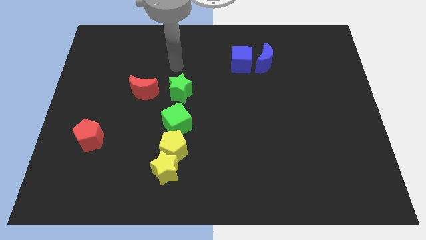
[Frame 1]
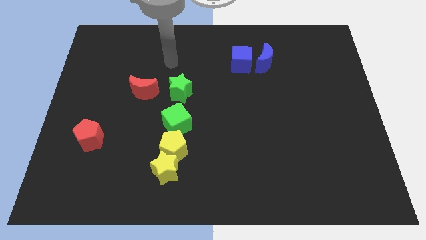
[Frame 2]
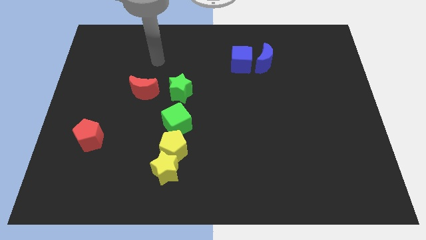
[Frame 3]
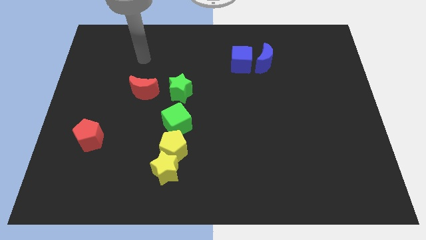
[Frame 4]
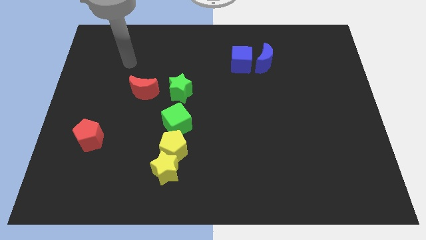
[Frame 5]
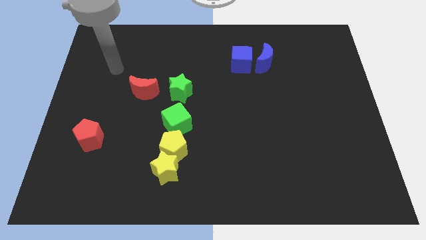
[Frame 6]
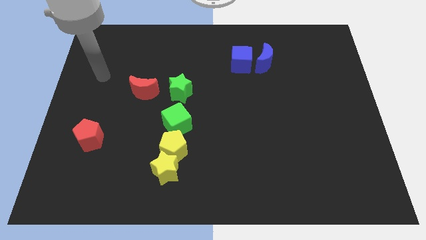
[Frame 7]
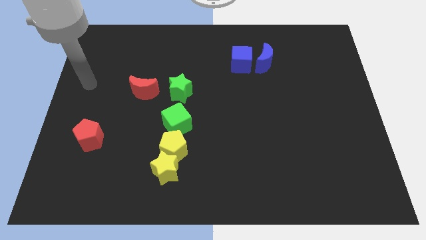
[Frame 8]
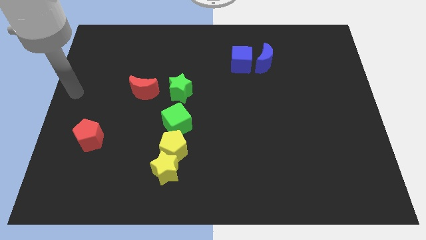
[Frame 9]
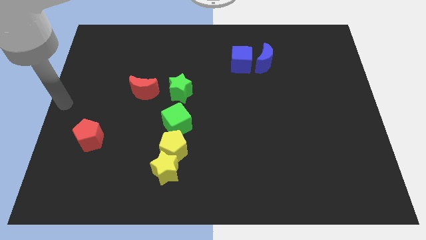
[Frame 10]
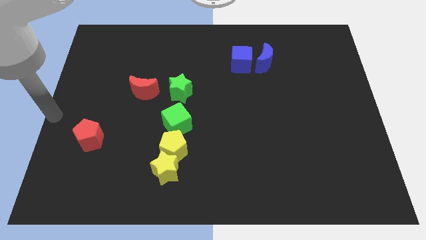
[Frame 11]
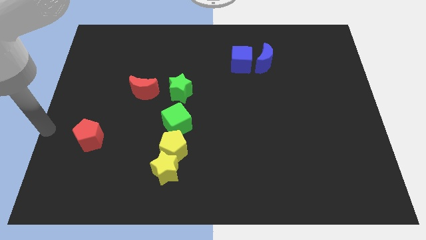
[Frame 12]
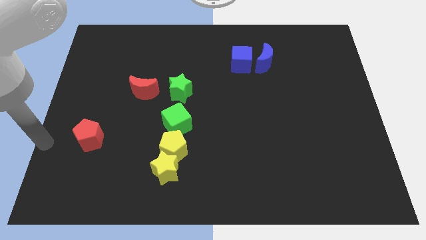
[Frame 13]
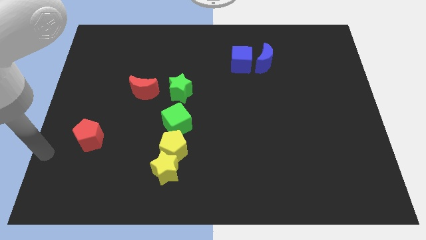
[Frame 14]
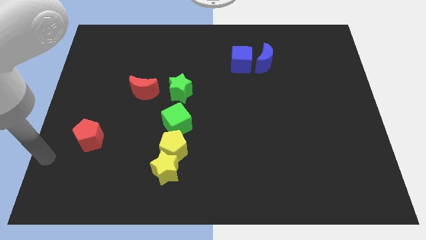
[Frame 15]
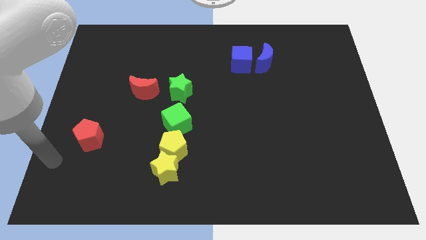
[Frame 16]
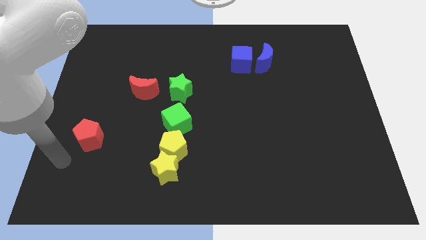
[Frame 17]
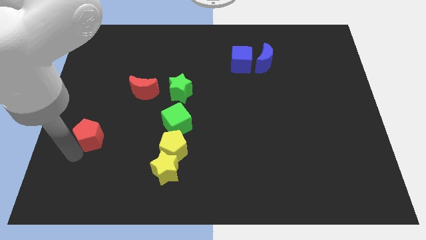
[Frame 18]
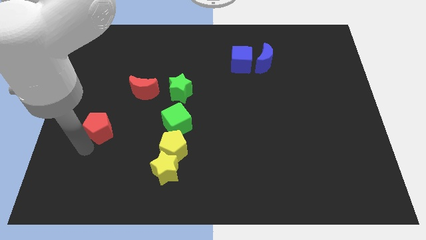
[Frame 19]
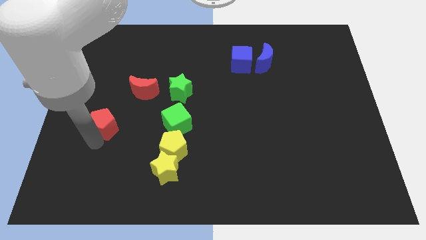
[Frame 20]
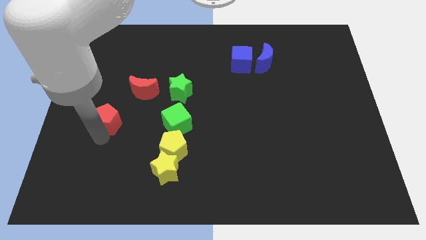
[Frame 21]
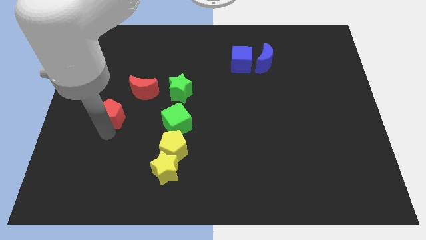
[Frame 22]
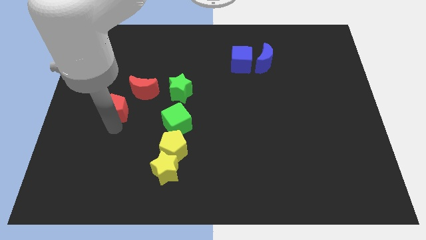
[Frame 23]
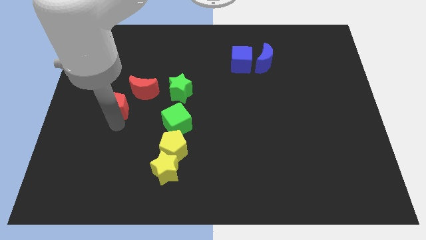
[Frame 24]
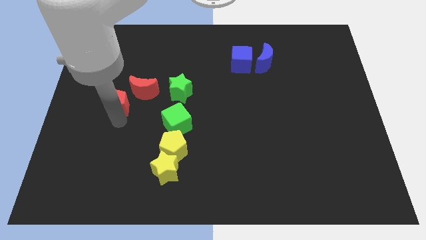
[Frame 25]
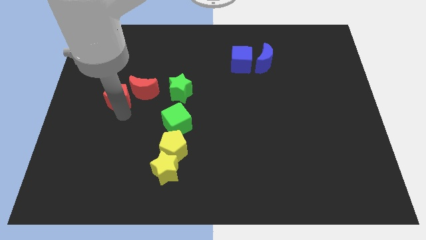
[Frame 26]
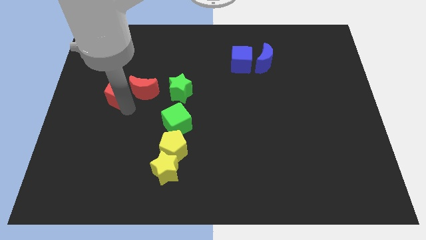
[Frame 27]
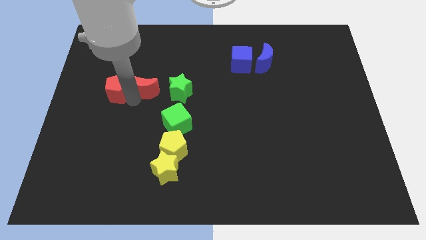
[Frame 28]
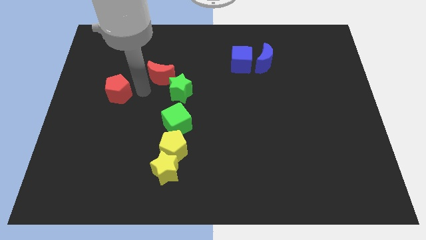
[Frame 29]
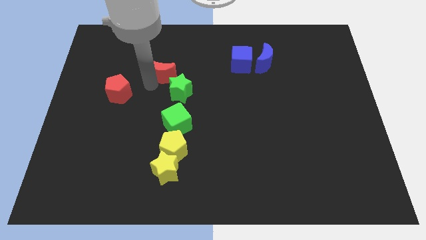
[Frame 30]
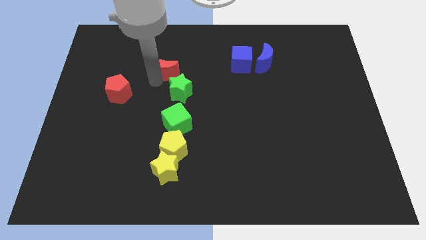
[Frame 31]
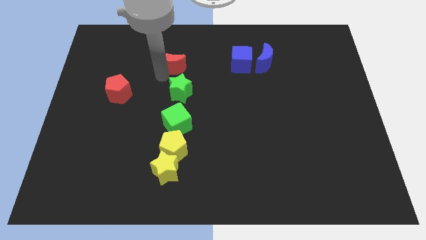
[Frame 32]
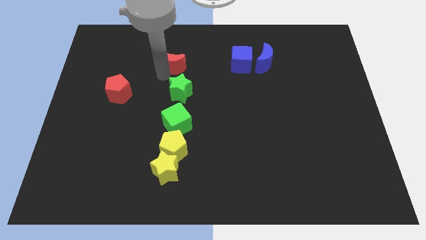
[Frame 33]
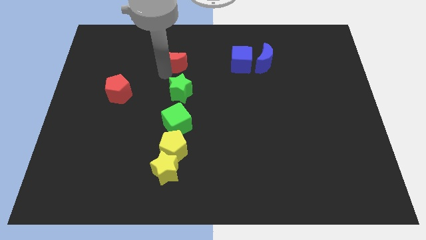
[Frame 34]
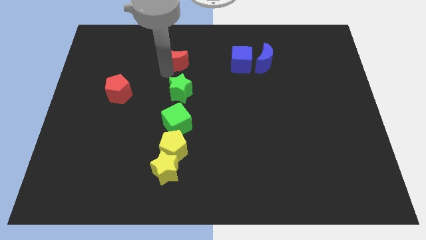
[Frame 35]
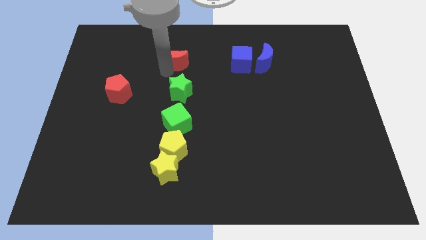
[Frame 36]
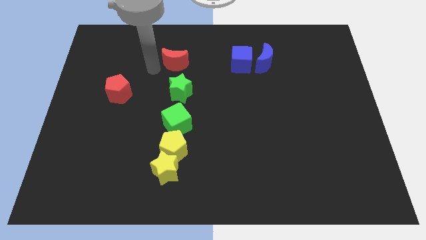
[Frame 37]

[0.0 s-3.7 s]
push the red pentagon to left side of the green star

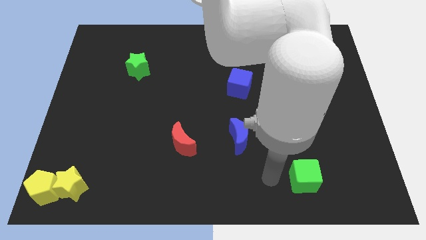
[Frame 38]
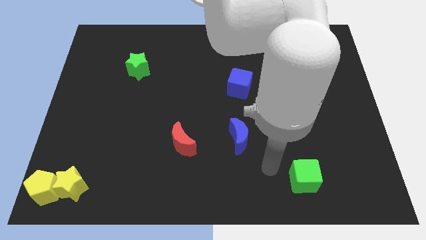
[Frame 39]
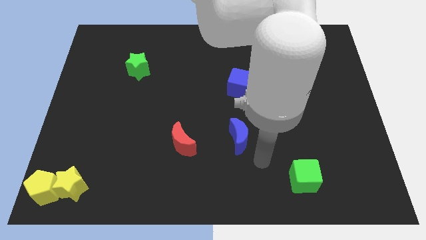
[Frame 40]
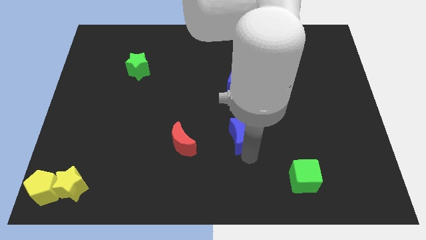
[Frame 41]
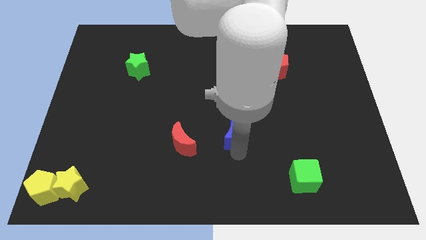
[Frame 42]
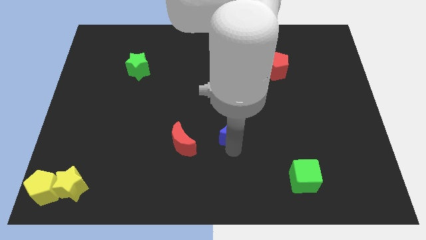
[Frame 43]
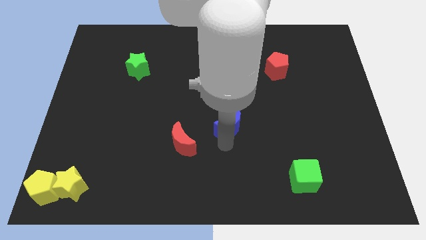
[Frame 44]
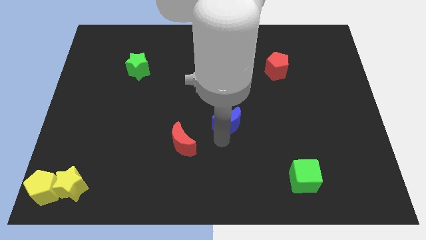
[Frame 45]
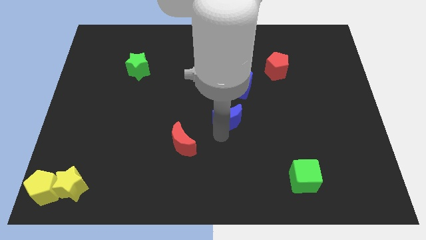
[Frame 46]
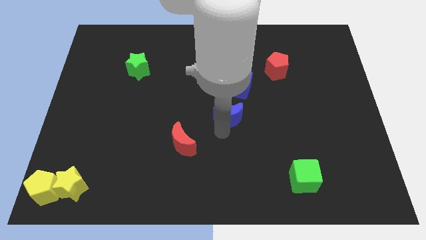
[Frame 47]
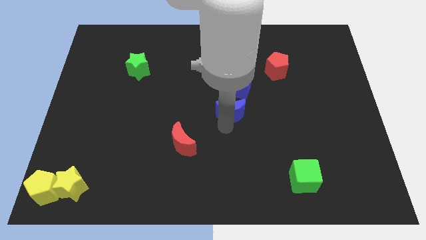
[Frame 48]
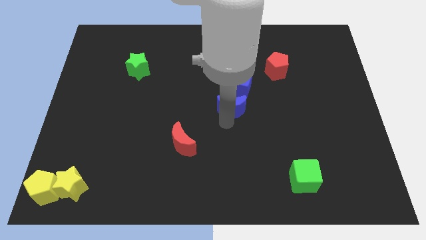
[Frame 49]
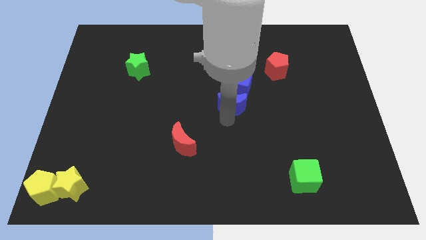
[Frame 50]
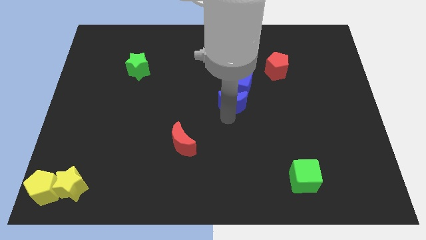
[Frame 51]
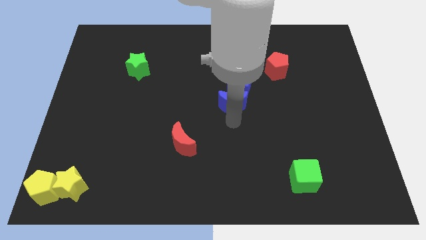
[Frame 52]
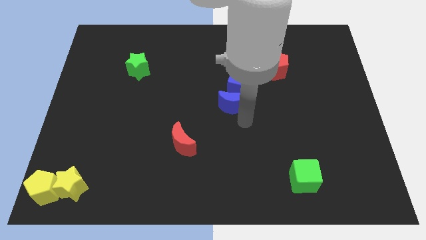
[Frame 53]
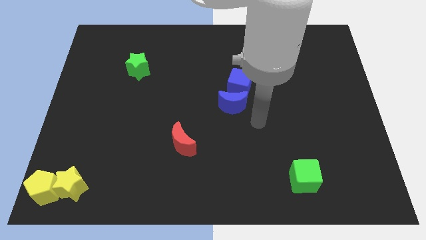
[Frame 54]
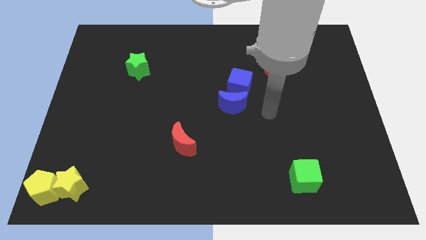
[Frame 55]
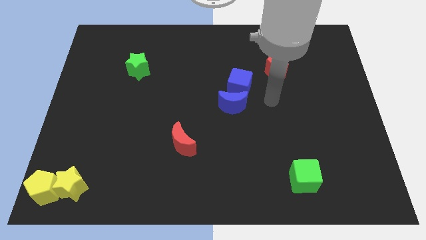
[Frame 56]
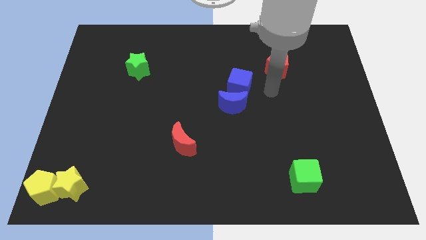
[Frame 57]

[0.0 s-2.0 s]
place the blue moon below the blue cube

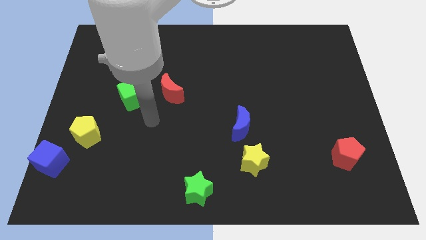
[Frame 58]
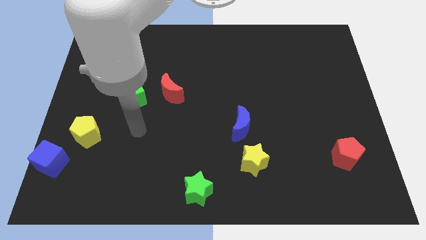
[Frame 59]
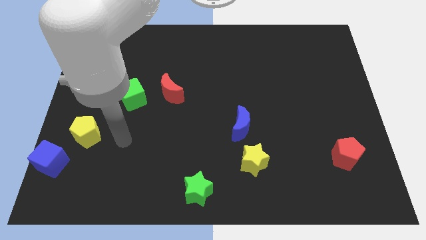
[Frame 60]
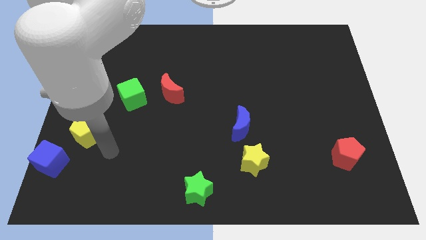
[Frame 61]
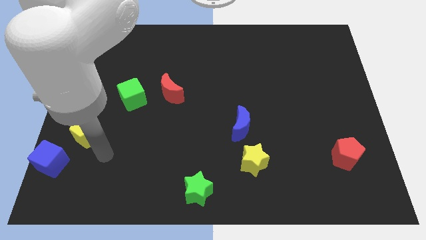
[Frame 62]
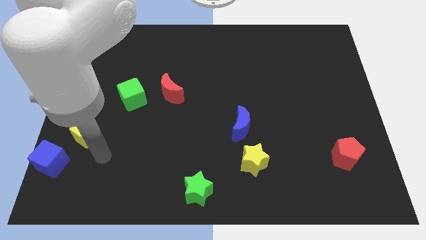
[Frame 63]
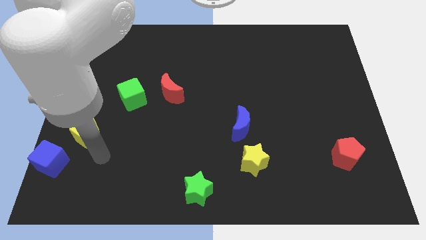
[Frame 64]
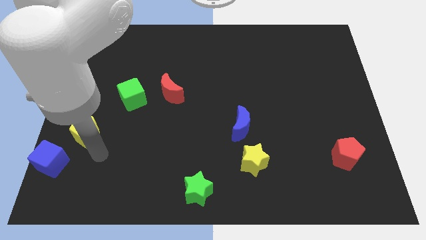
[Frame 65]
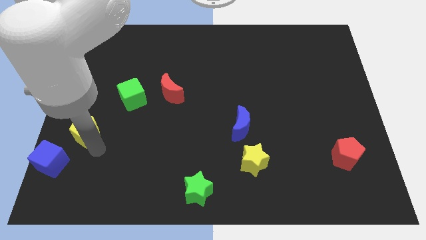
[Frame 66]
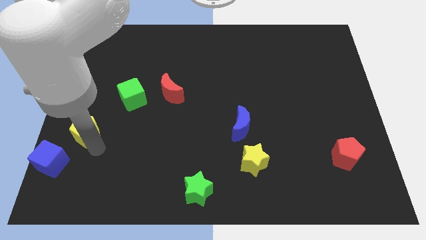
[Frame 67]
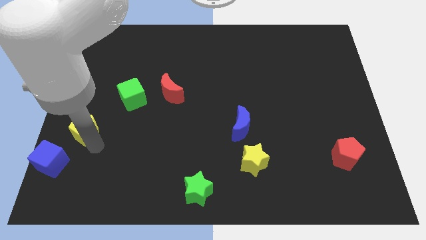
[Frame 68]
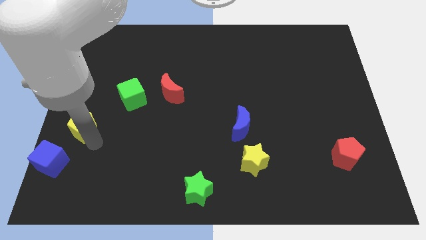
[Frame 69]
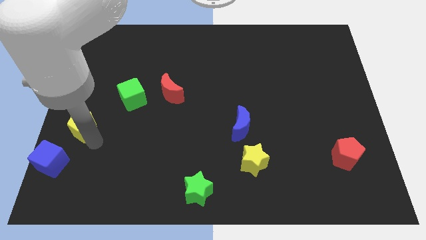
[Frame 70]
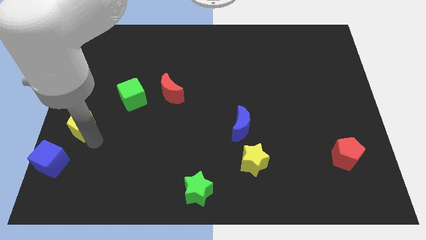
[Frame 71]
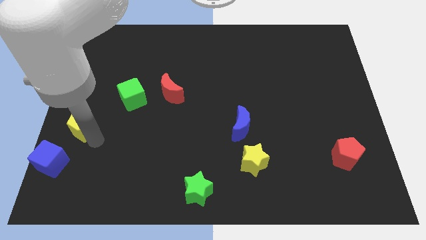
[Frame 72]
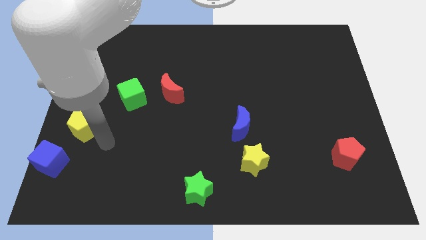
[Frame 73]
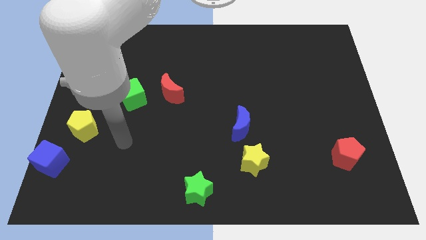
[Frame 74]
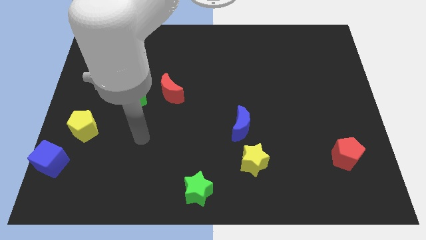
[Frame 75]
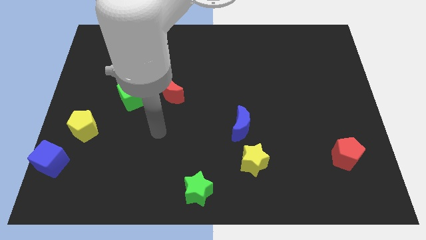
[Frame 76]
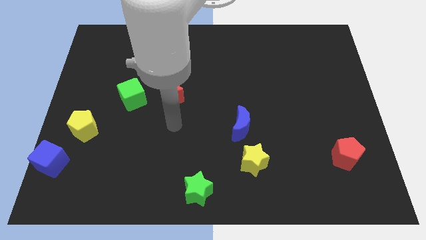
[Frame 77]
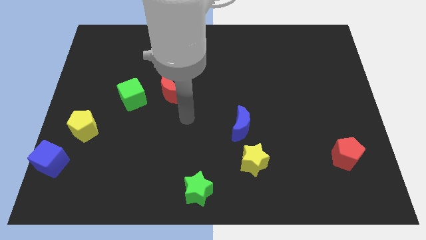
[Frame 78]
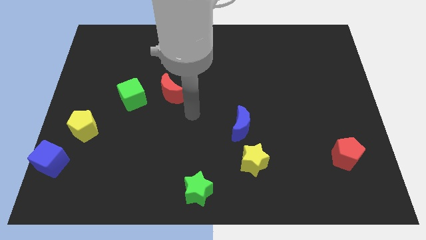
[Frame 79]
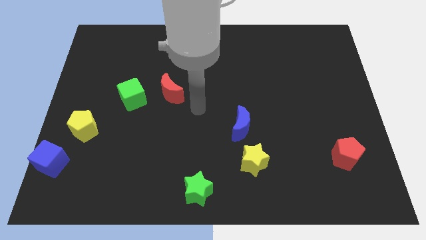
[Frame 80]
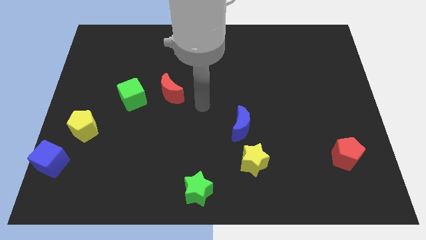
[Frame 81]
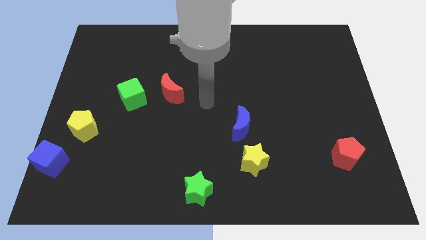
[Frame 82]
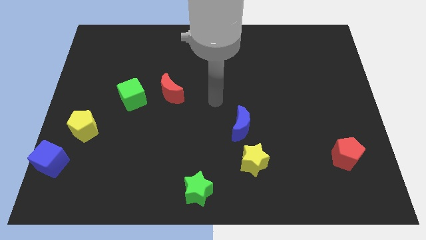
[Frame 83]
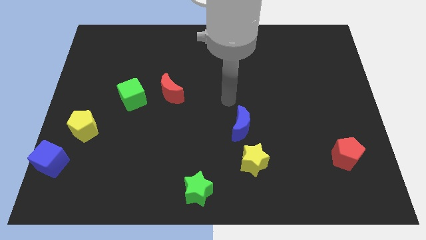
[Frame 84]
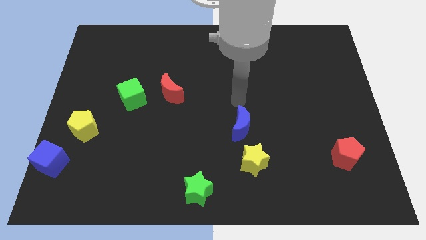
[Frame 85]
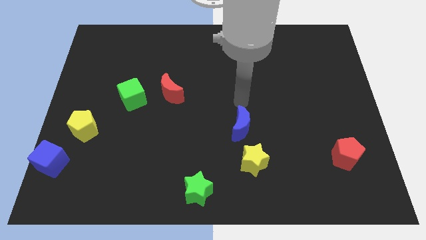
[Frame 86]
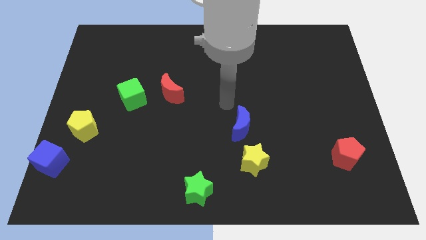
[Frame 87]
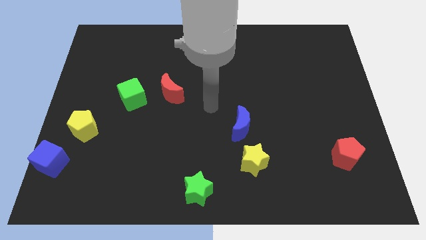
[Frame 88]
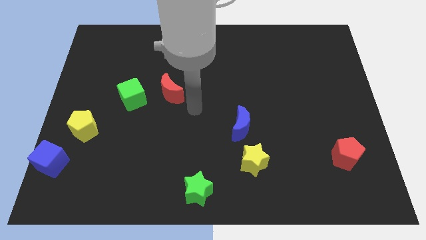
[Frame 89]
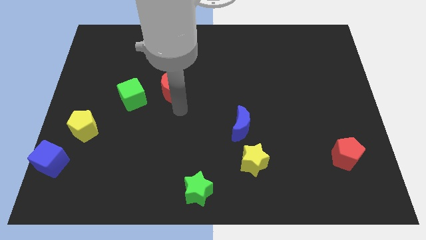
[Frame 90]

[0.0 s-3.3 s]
move the yellow pentagon to the left of the board
